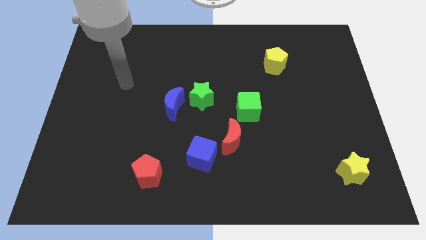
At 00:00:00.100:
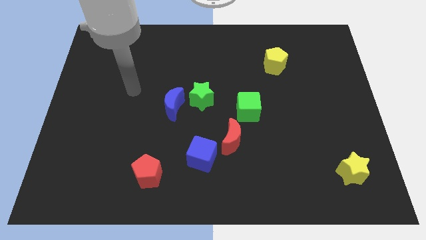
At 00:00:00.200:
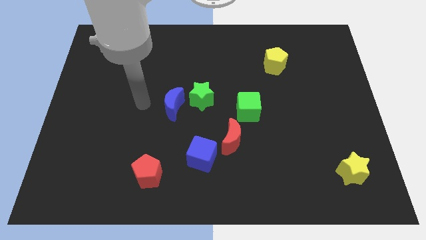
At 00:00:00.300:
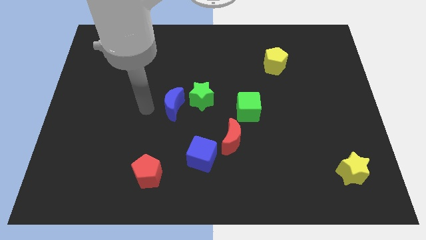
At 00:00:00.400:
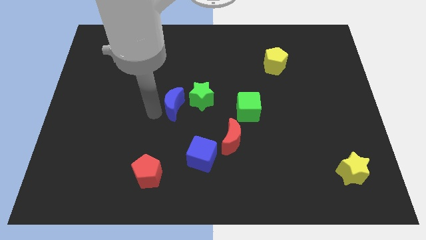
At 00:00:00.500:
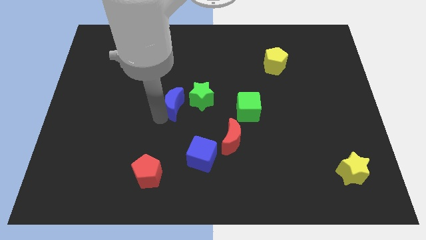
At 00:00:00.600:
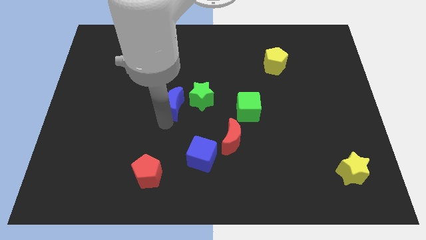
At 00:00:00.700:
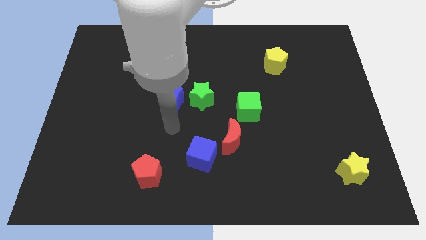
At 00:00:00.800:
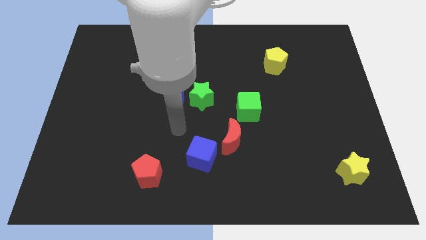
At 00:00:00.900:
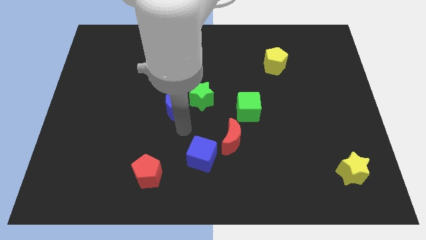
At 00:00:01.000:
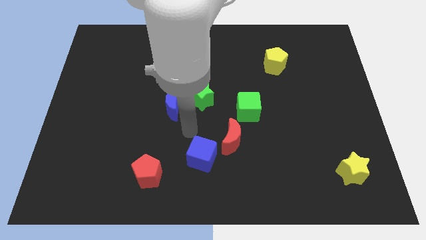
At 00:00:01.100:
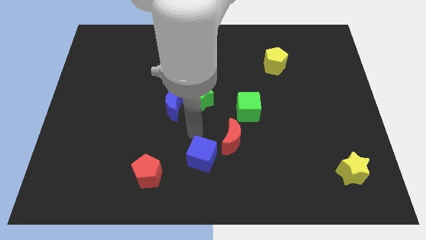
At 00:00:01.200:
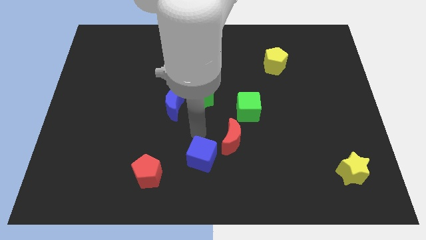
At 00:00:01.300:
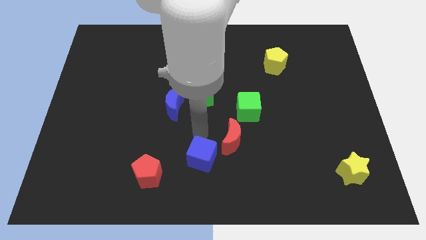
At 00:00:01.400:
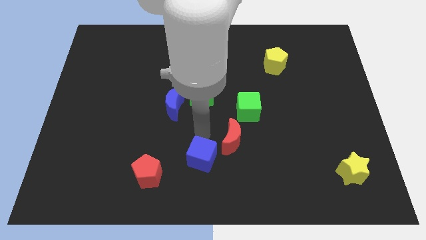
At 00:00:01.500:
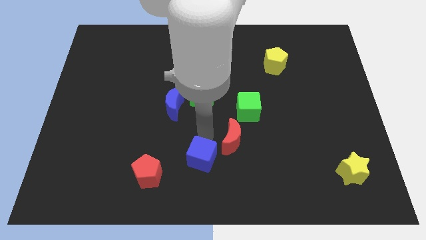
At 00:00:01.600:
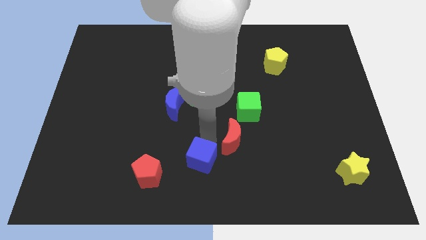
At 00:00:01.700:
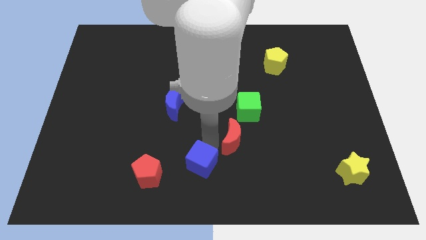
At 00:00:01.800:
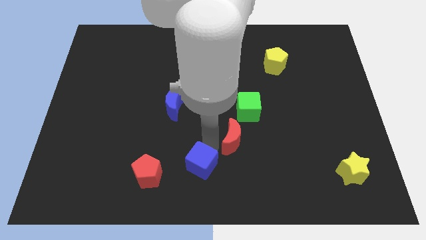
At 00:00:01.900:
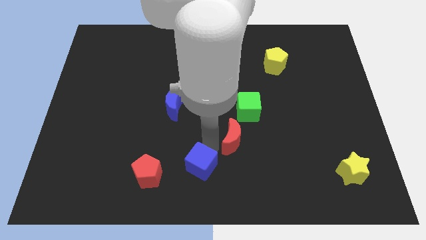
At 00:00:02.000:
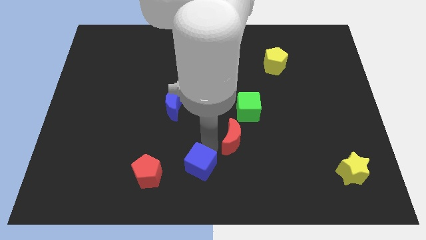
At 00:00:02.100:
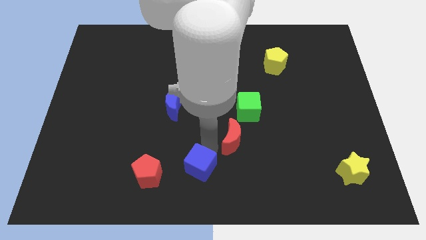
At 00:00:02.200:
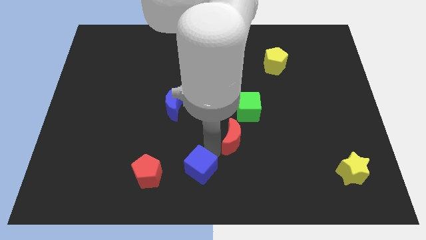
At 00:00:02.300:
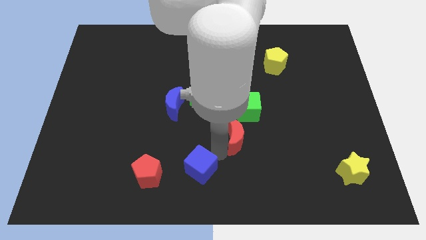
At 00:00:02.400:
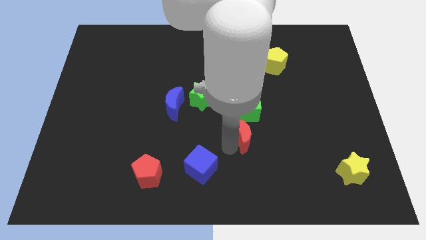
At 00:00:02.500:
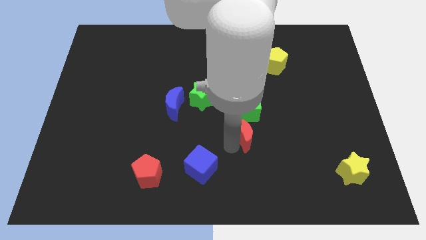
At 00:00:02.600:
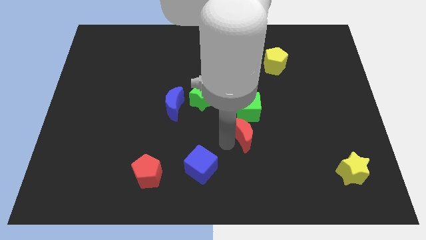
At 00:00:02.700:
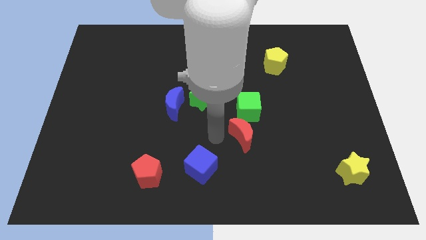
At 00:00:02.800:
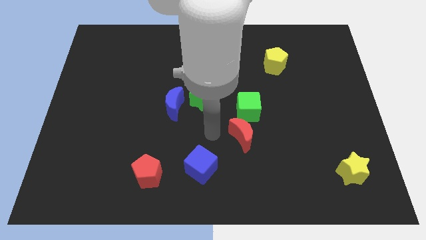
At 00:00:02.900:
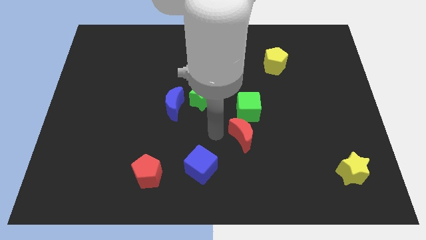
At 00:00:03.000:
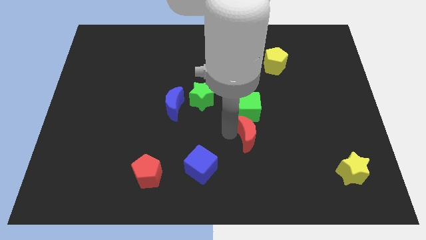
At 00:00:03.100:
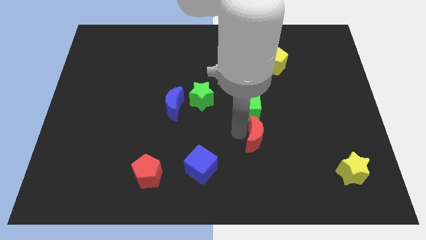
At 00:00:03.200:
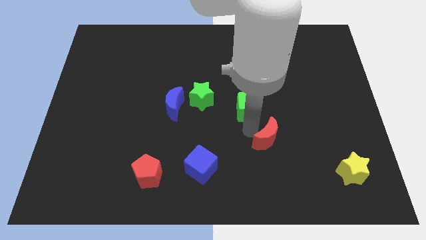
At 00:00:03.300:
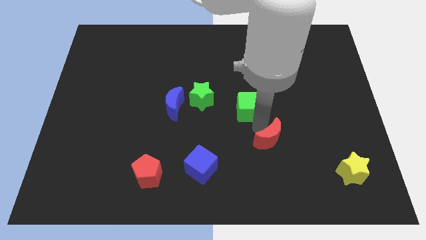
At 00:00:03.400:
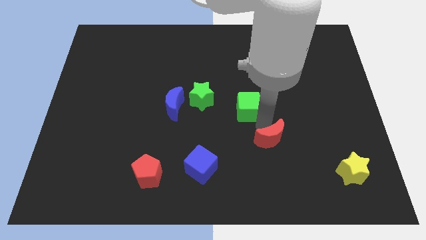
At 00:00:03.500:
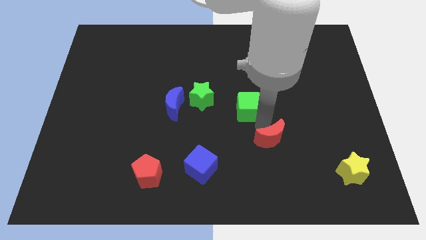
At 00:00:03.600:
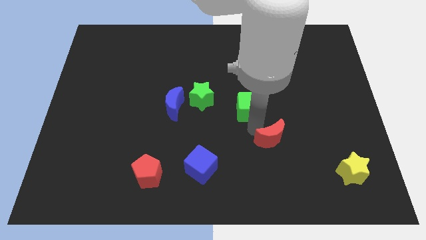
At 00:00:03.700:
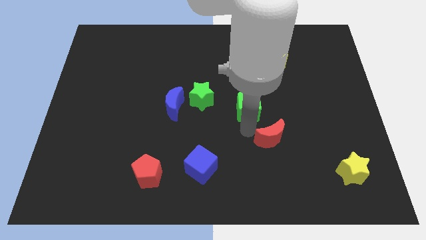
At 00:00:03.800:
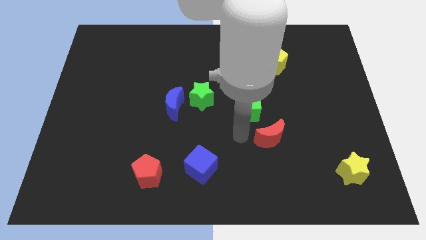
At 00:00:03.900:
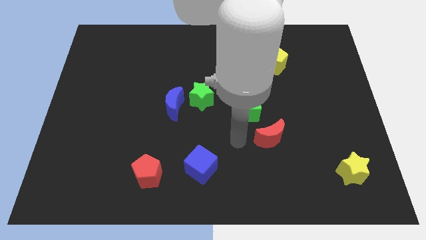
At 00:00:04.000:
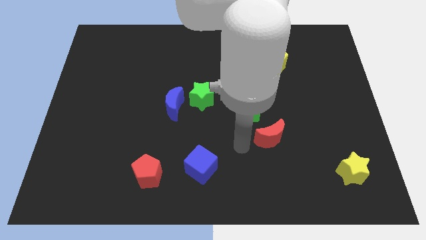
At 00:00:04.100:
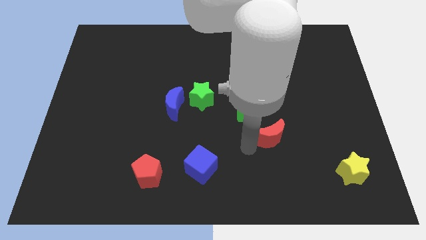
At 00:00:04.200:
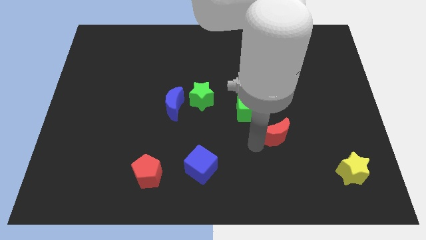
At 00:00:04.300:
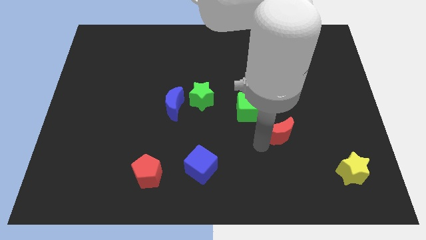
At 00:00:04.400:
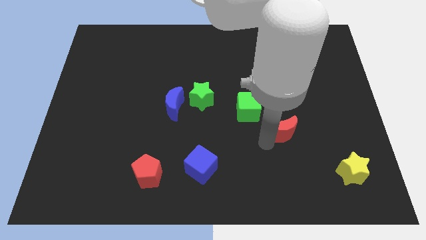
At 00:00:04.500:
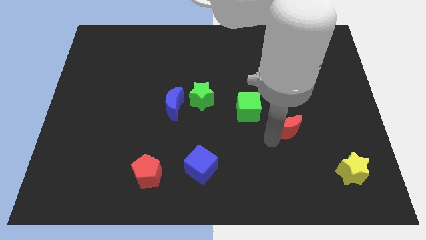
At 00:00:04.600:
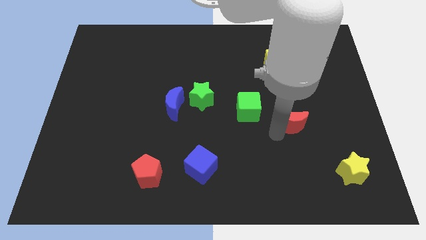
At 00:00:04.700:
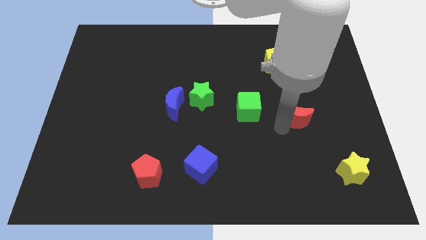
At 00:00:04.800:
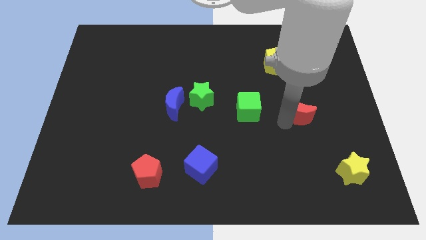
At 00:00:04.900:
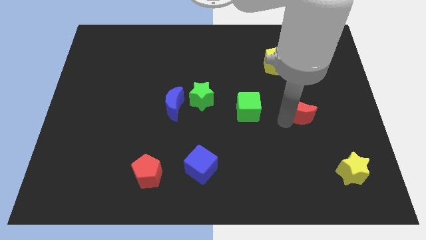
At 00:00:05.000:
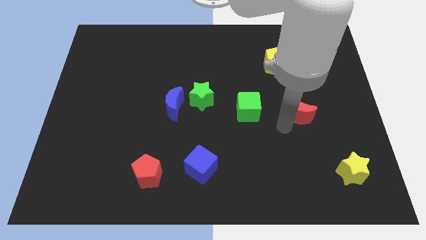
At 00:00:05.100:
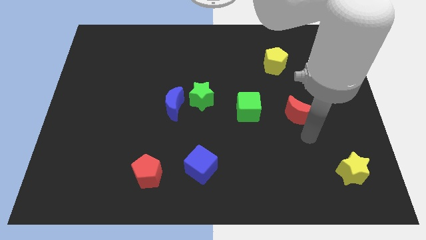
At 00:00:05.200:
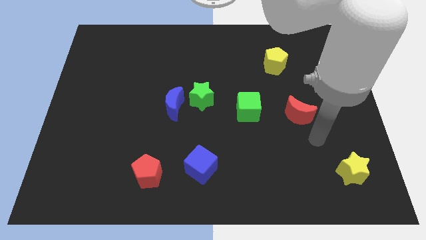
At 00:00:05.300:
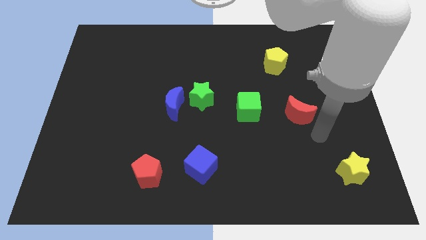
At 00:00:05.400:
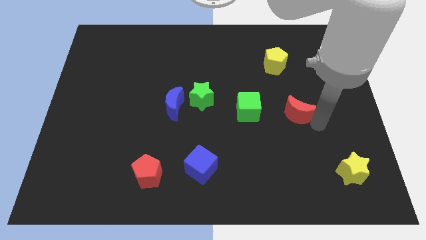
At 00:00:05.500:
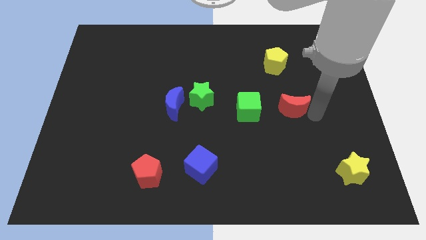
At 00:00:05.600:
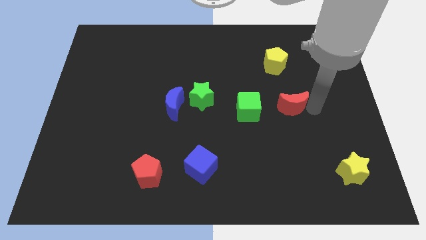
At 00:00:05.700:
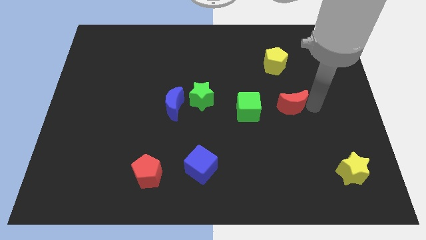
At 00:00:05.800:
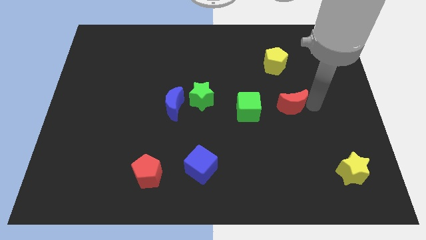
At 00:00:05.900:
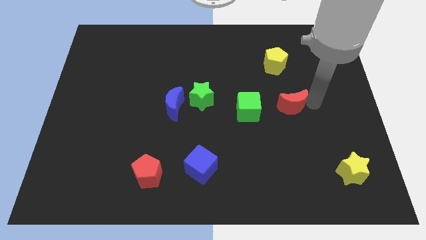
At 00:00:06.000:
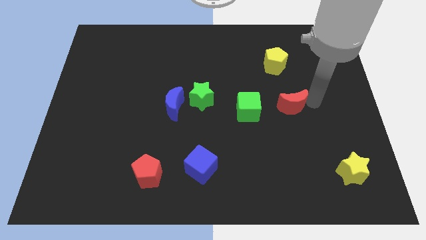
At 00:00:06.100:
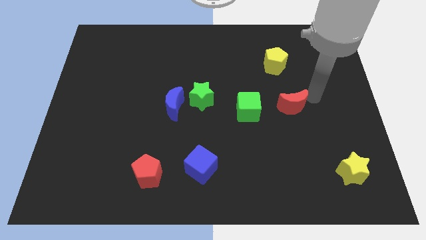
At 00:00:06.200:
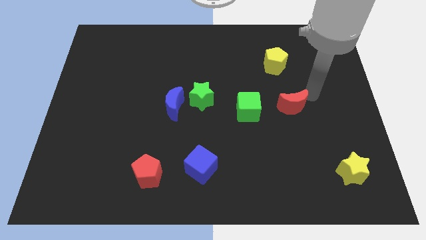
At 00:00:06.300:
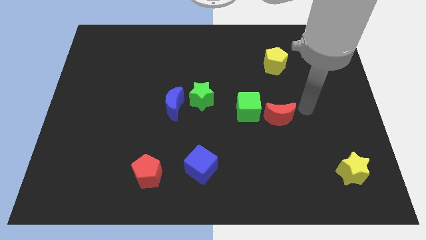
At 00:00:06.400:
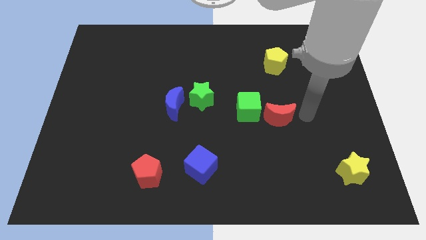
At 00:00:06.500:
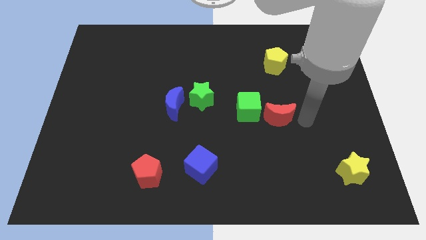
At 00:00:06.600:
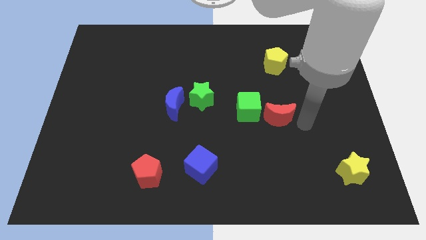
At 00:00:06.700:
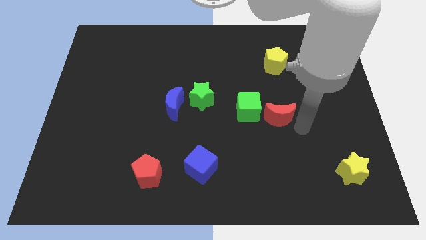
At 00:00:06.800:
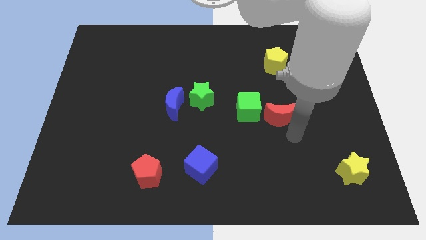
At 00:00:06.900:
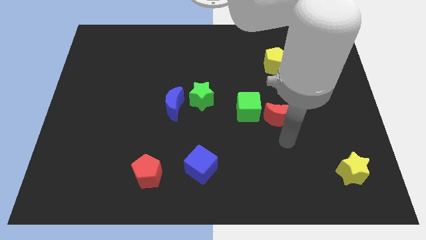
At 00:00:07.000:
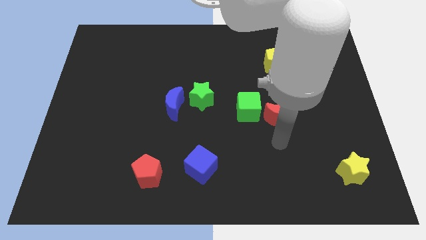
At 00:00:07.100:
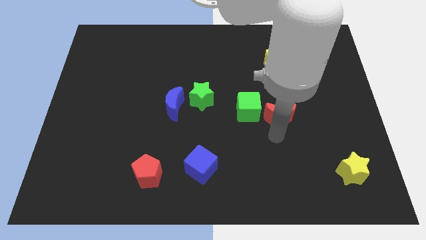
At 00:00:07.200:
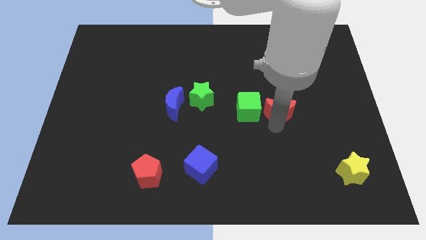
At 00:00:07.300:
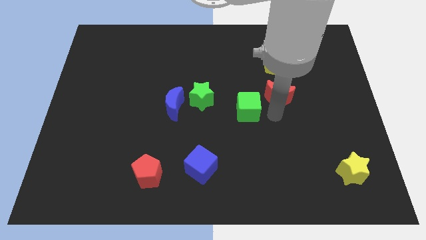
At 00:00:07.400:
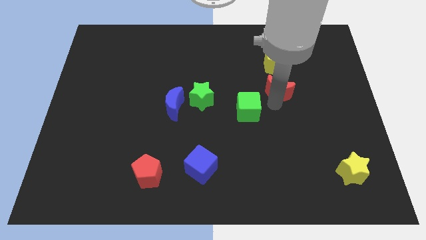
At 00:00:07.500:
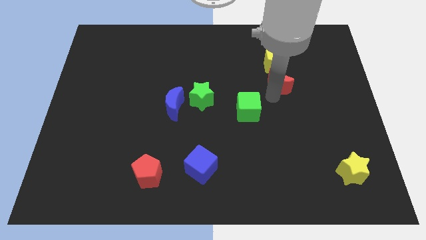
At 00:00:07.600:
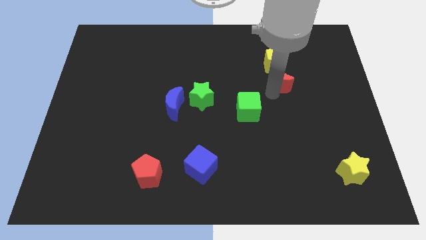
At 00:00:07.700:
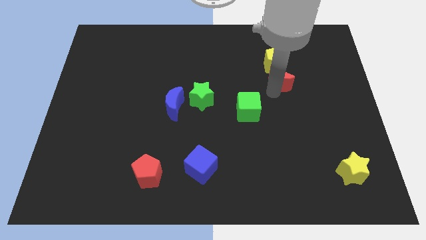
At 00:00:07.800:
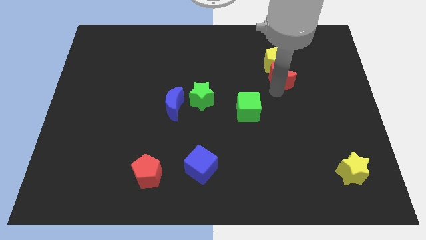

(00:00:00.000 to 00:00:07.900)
push the red moon towards the yellow pentagon

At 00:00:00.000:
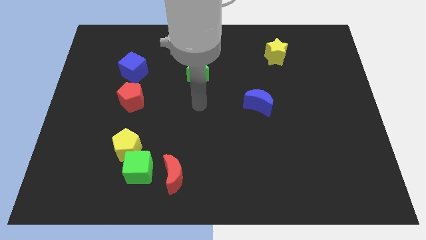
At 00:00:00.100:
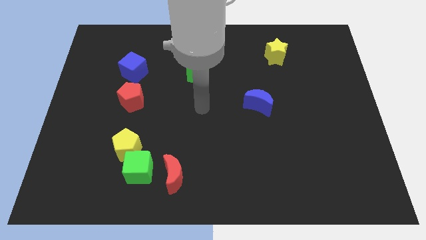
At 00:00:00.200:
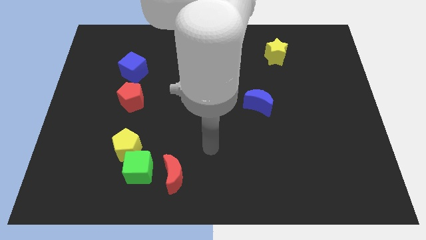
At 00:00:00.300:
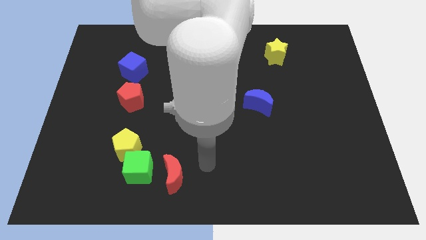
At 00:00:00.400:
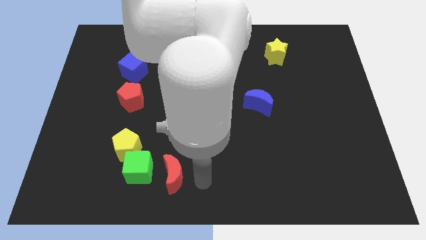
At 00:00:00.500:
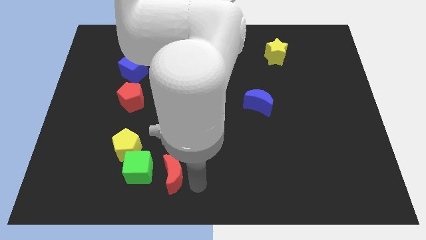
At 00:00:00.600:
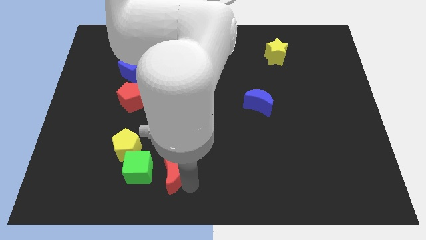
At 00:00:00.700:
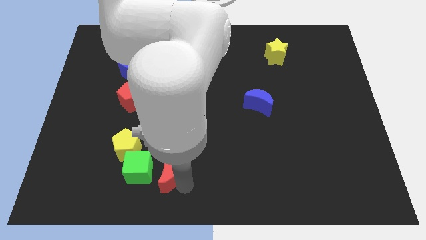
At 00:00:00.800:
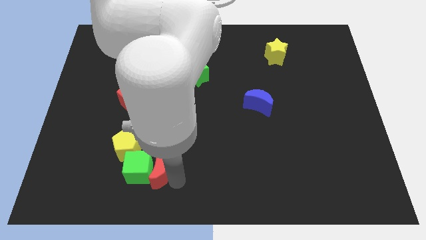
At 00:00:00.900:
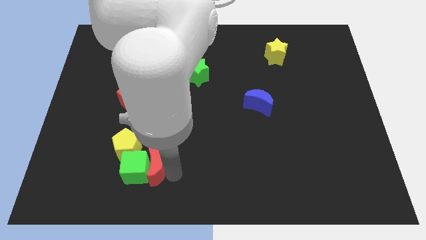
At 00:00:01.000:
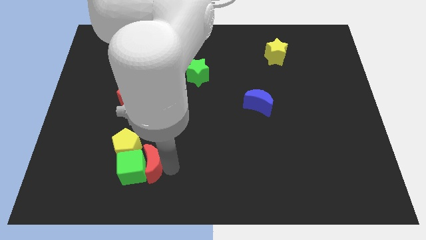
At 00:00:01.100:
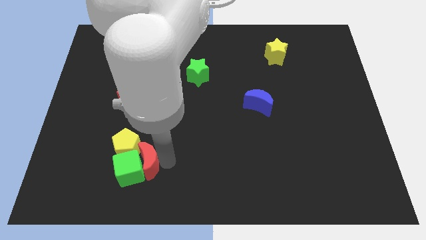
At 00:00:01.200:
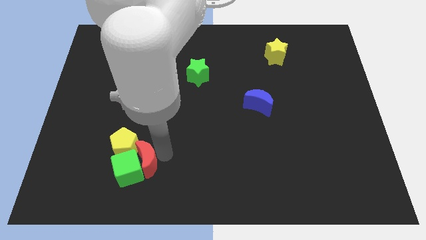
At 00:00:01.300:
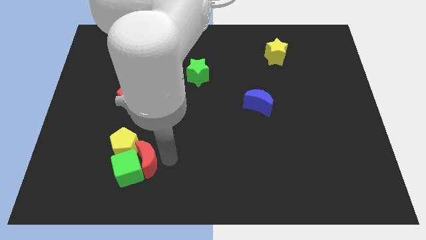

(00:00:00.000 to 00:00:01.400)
push the red moon to the yellow pentagon
